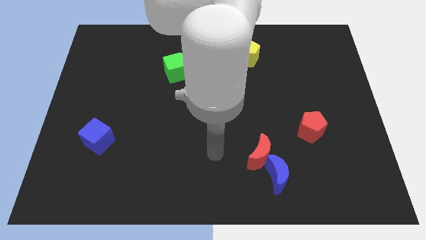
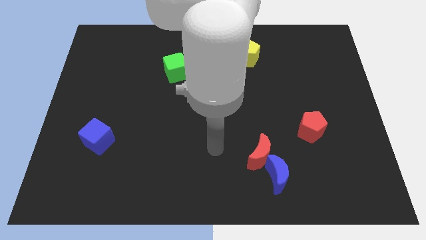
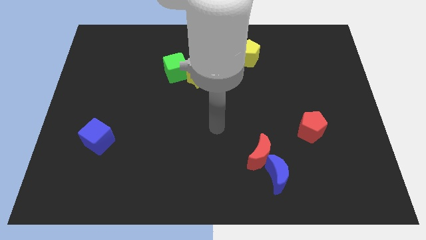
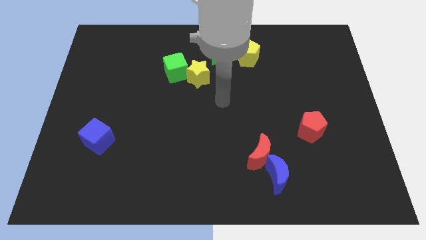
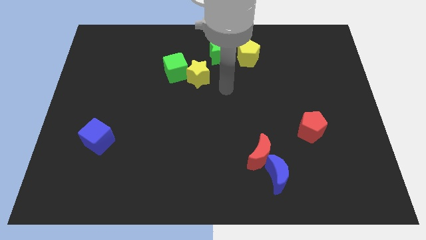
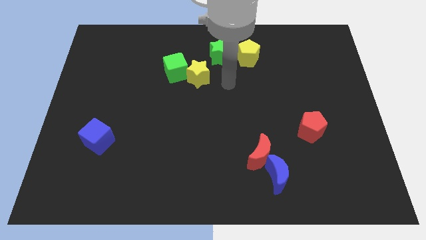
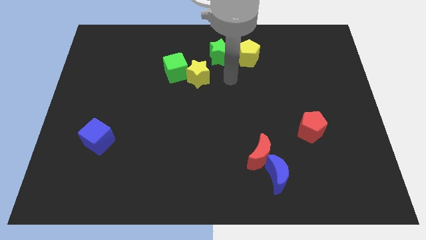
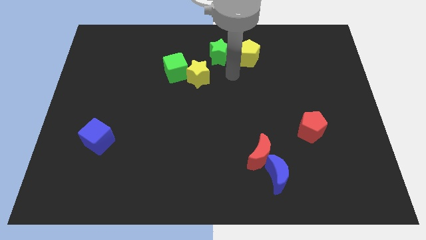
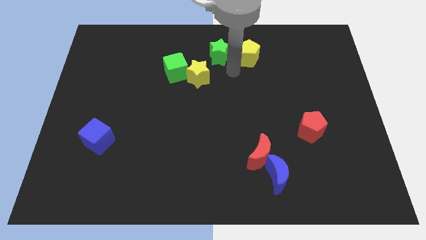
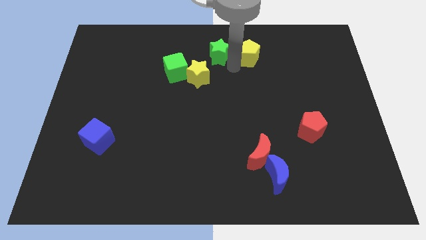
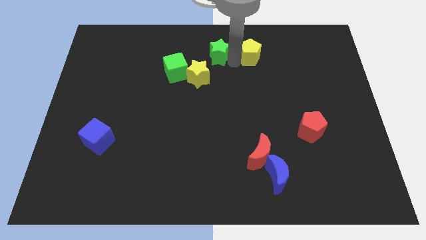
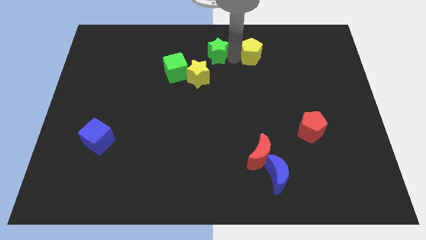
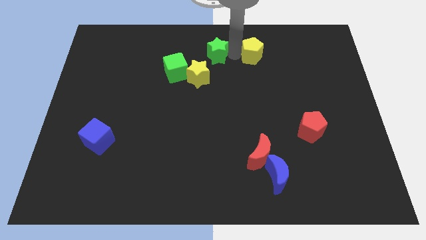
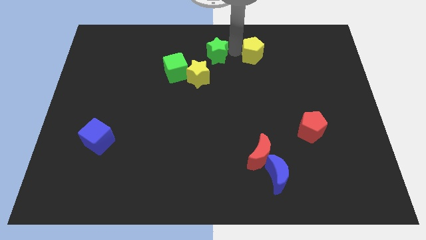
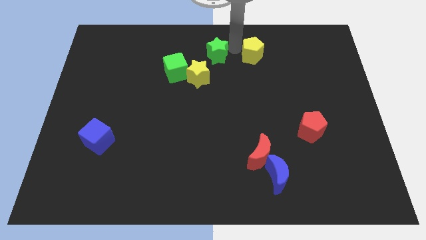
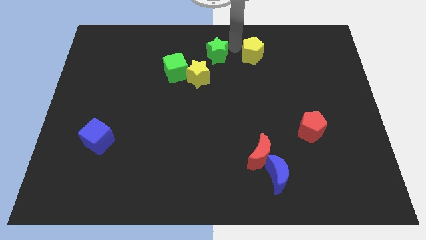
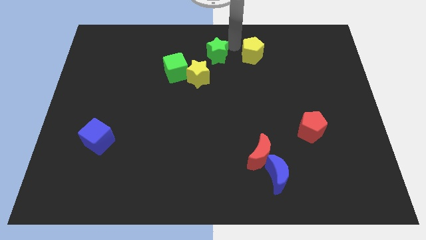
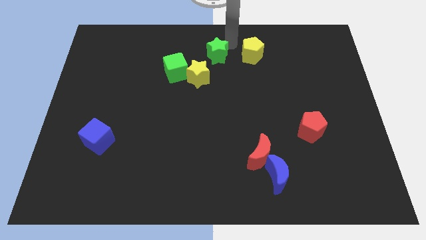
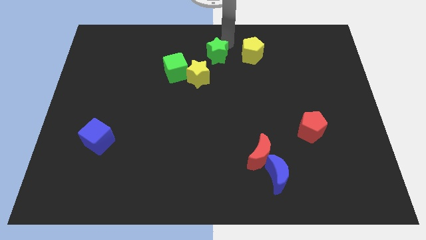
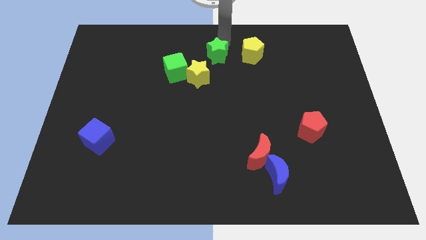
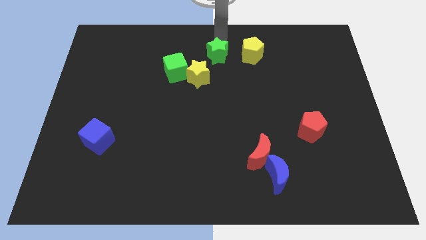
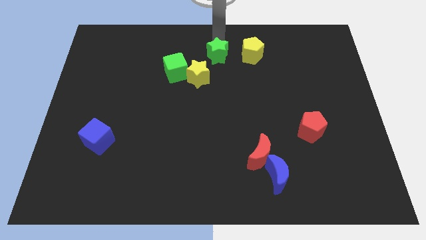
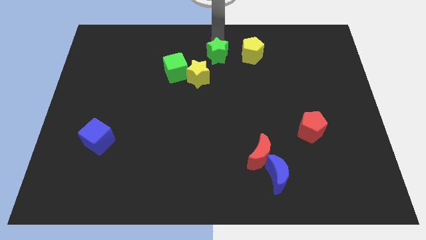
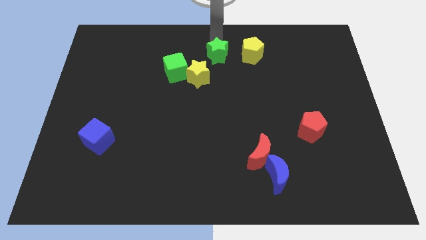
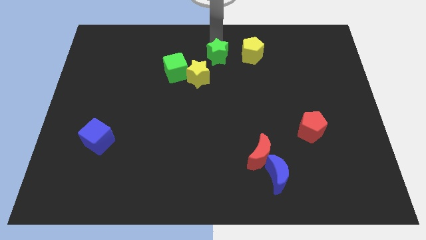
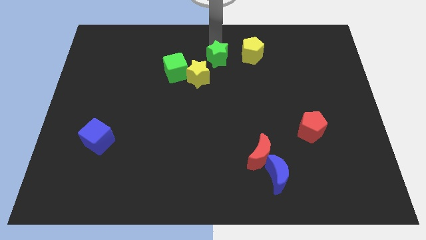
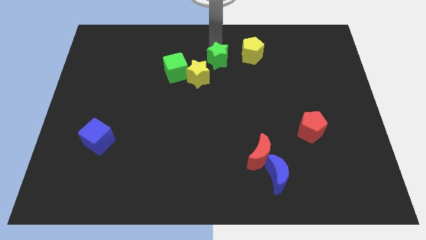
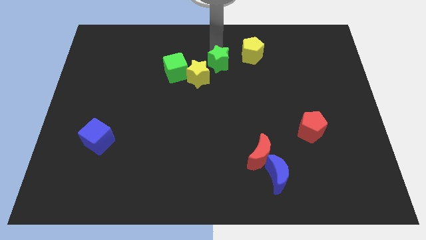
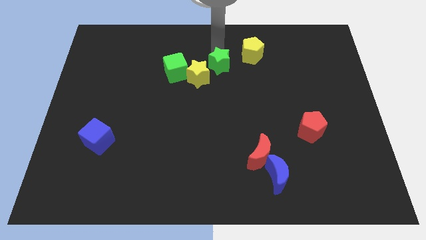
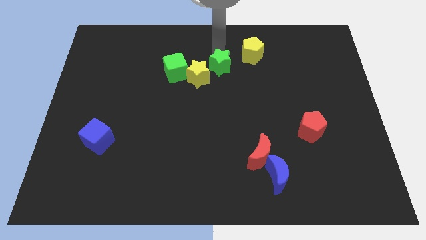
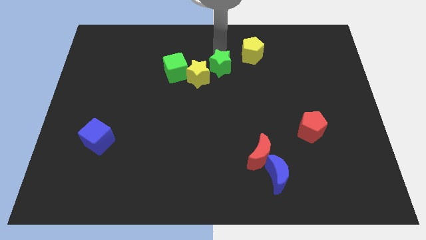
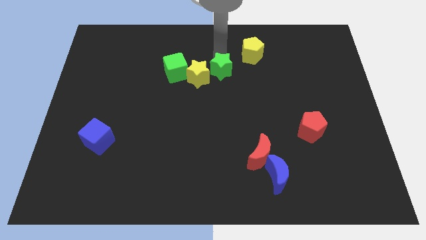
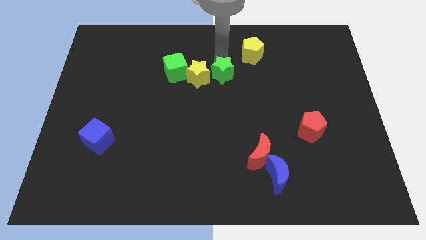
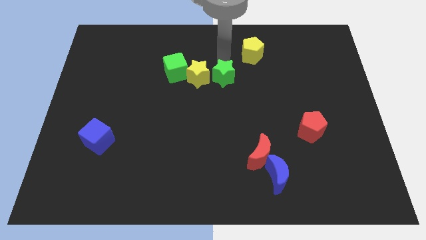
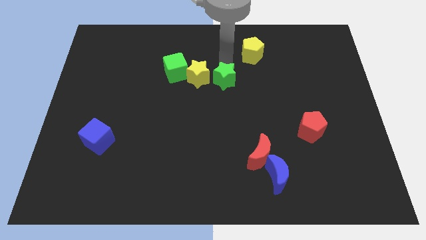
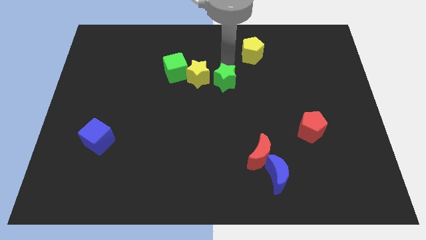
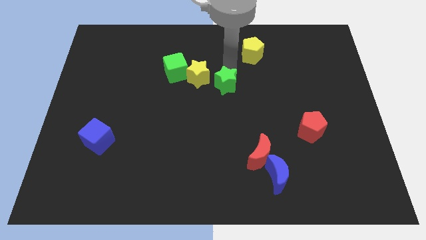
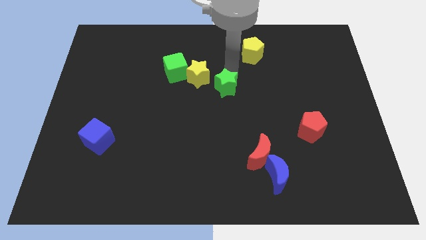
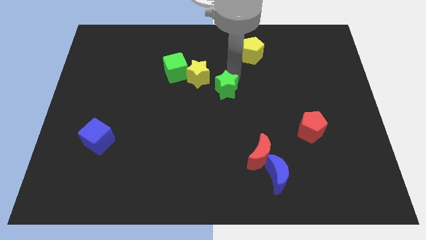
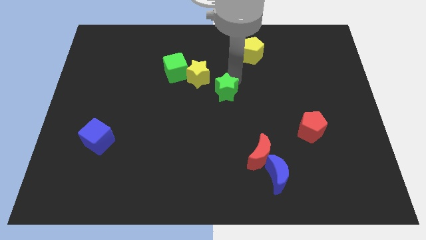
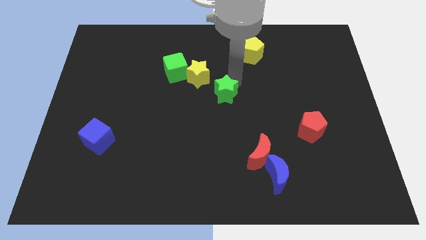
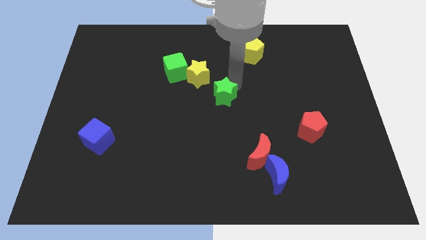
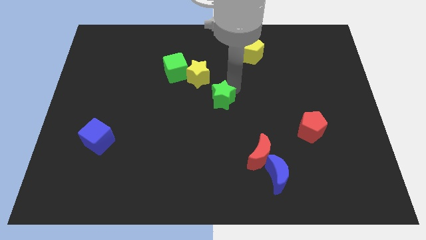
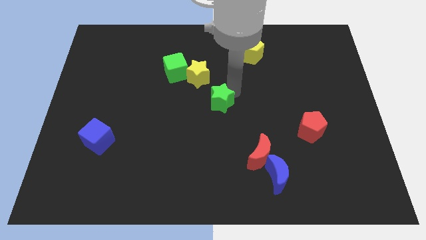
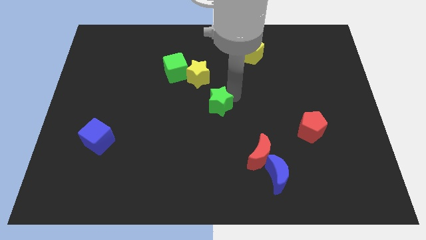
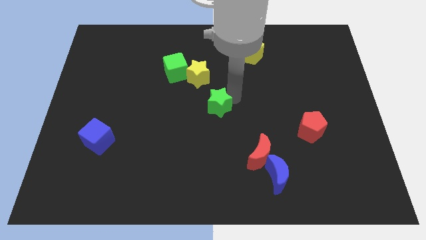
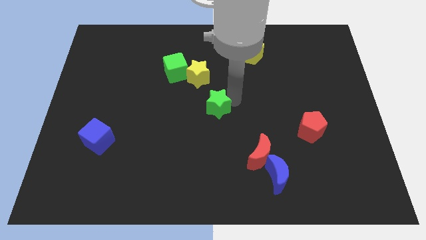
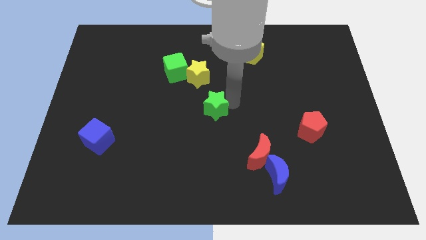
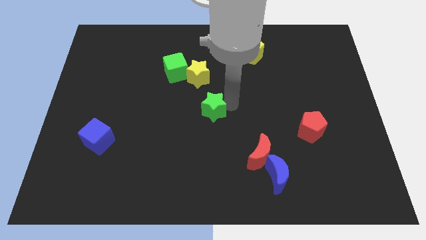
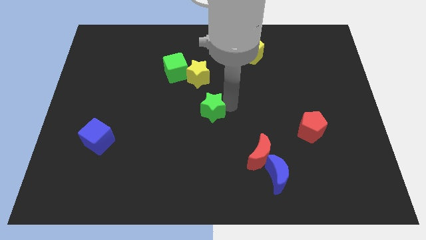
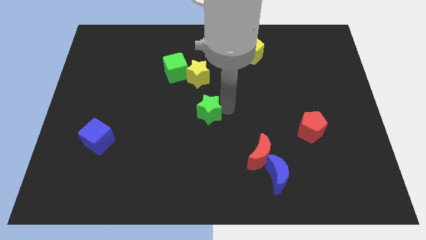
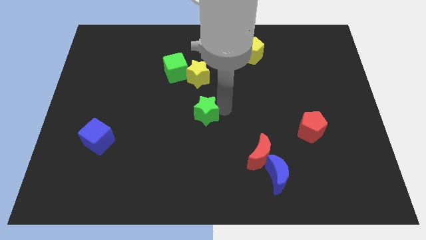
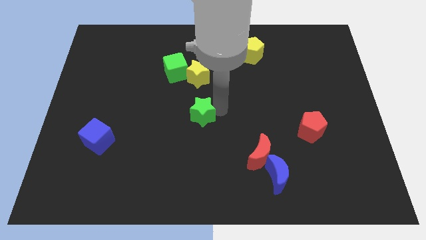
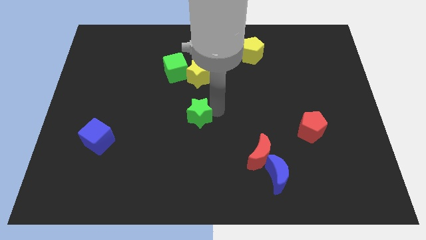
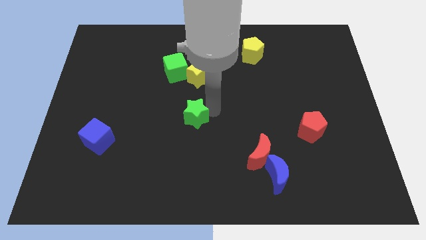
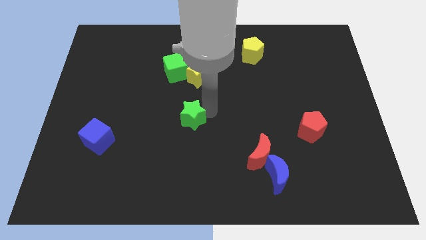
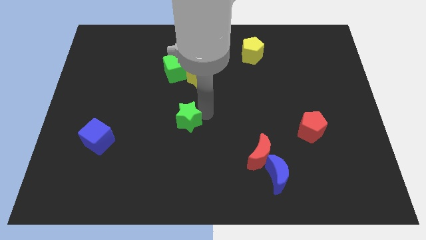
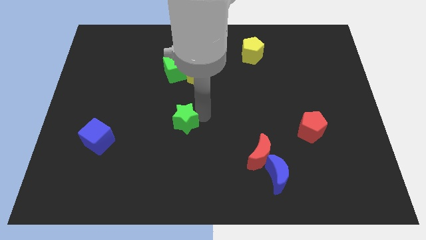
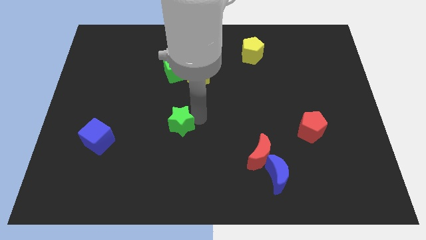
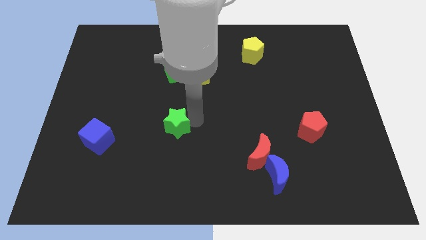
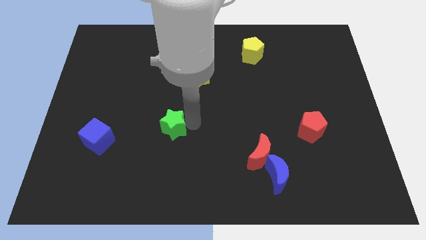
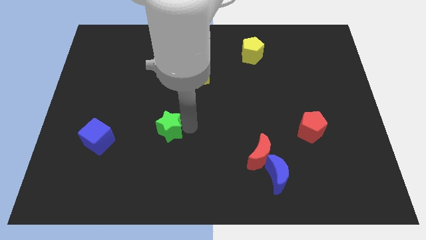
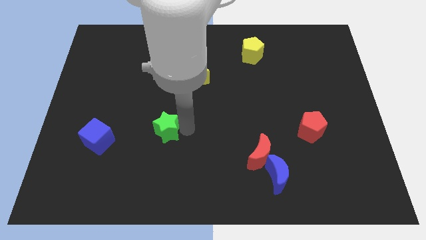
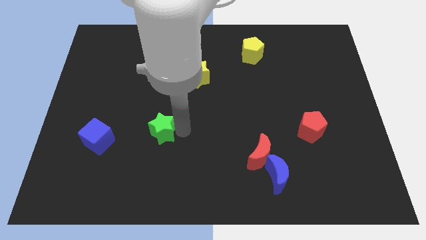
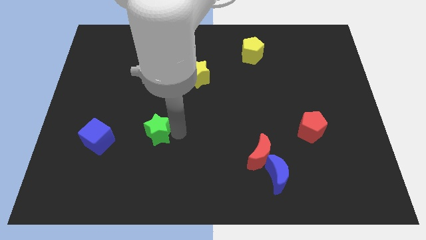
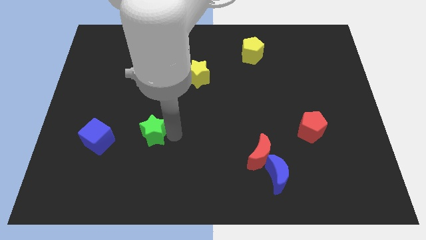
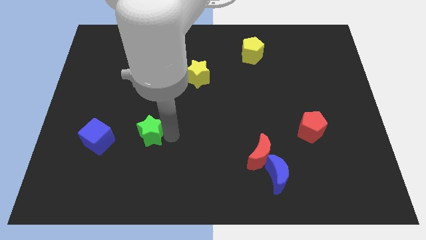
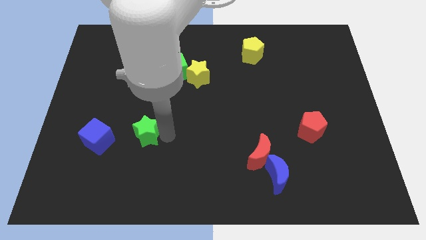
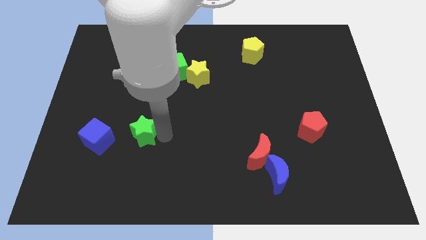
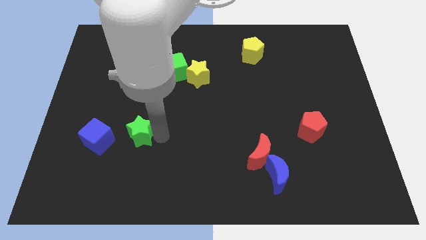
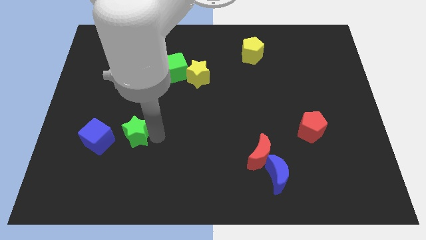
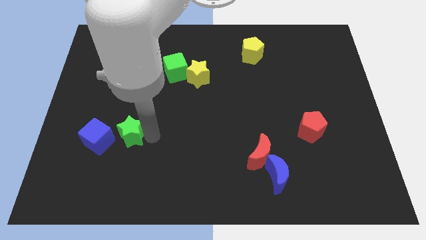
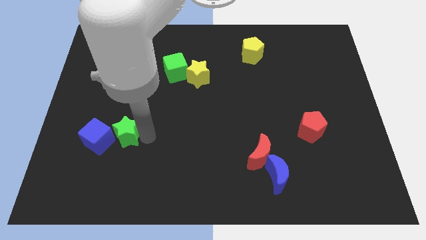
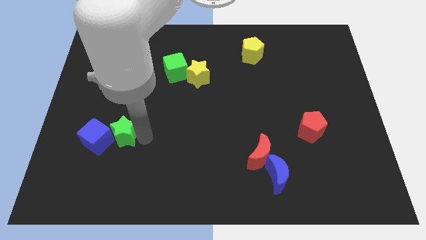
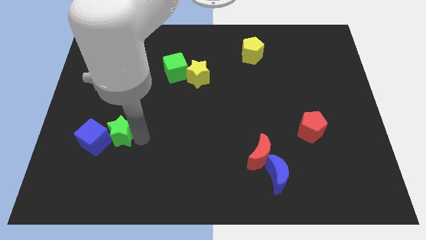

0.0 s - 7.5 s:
put the green star towards the blue cube

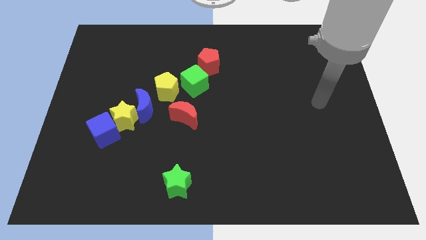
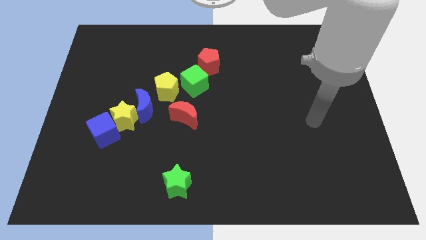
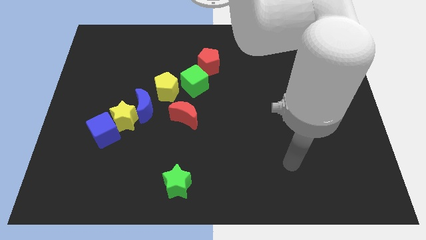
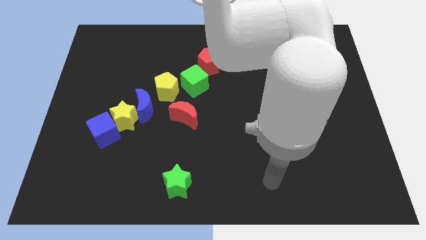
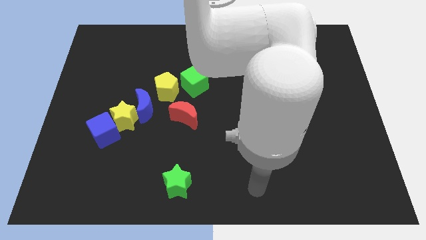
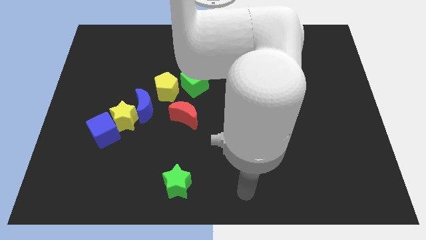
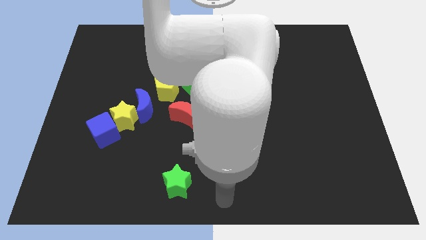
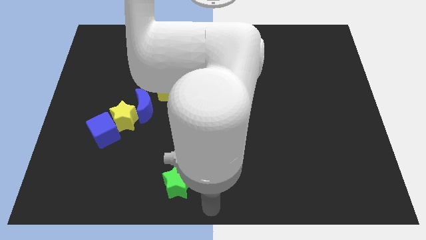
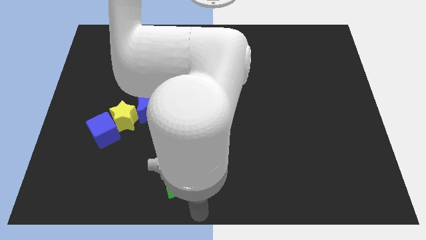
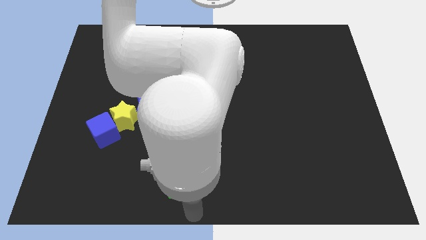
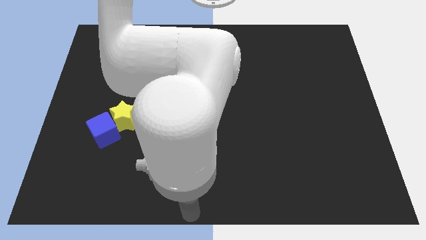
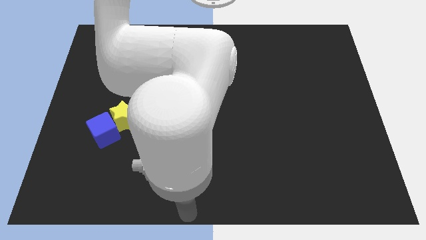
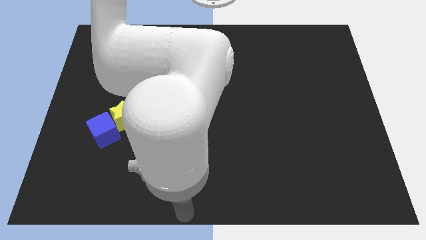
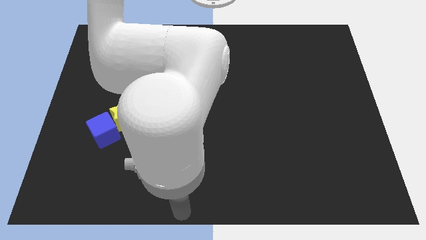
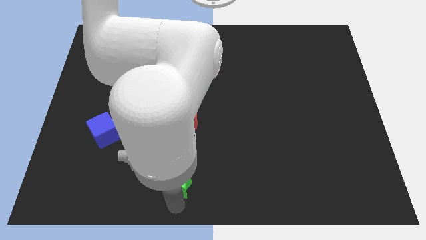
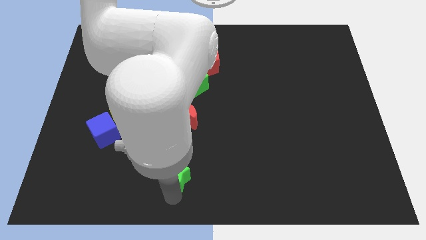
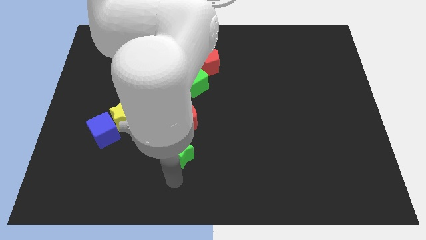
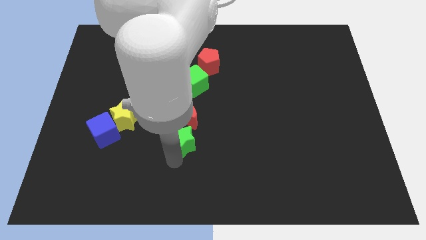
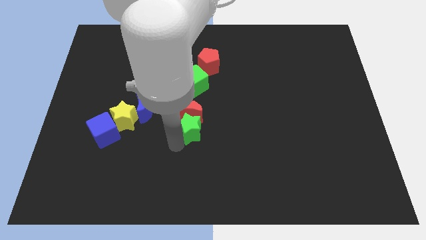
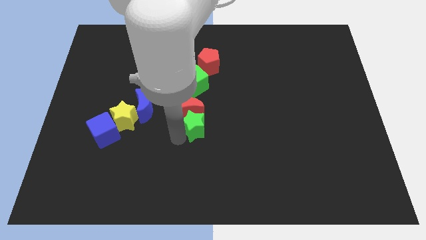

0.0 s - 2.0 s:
put the green star towards the red moon
